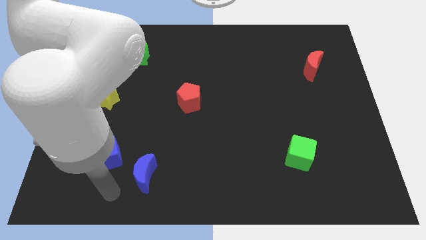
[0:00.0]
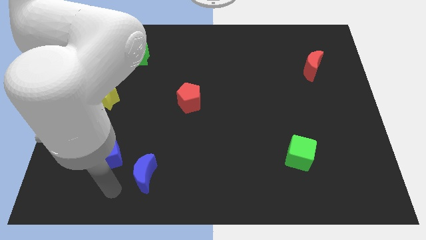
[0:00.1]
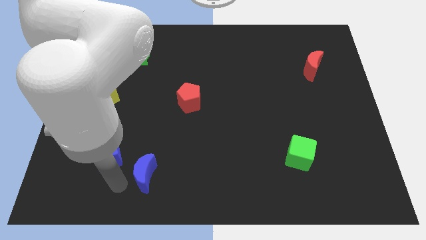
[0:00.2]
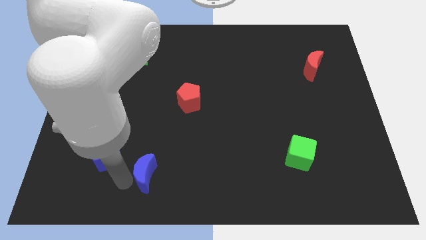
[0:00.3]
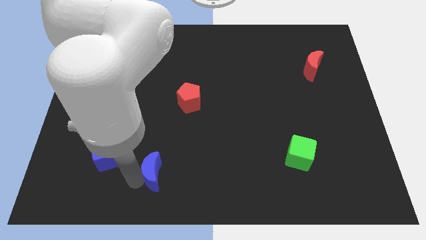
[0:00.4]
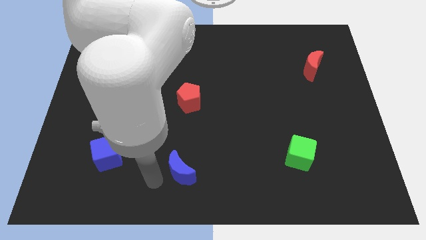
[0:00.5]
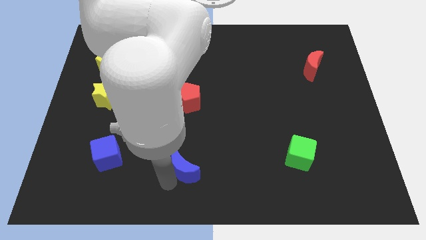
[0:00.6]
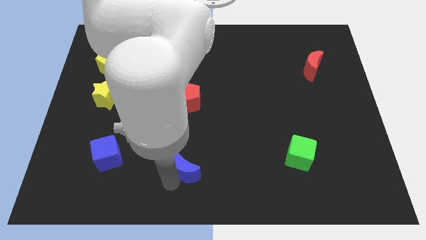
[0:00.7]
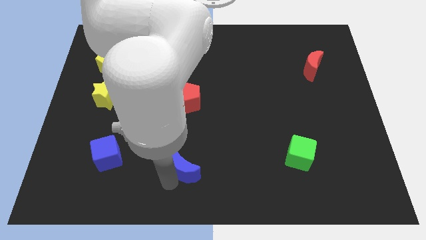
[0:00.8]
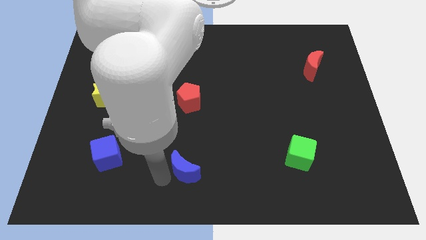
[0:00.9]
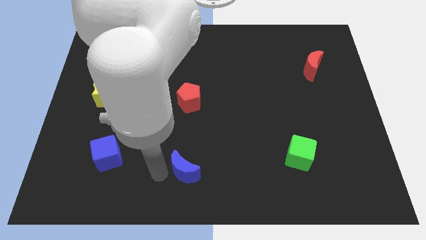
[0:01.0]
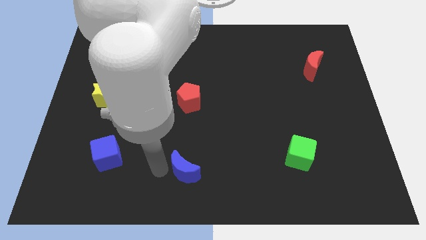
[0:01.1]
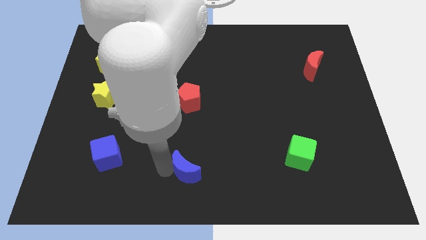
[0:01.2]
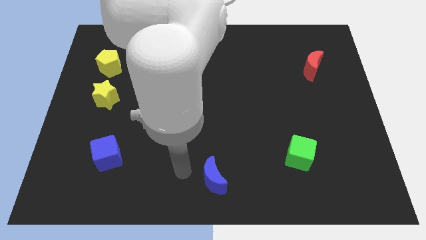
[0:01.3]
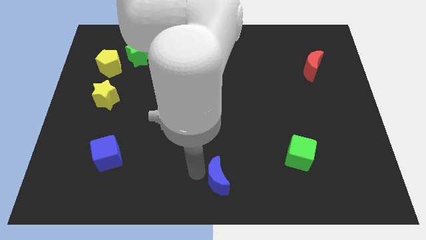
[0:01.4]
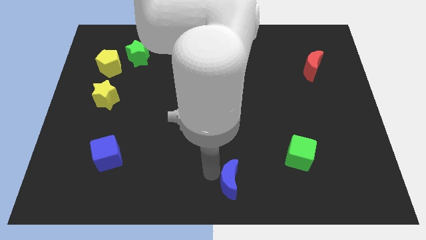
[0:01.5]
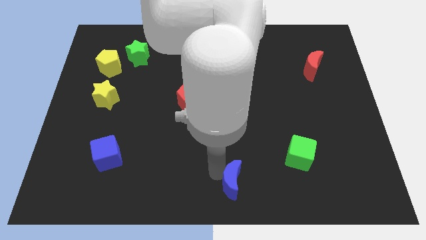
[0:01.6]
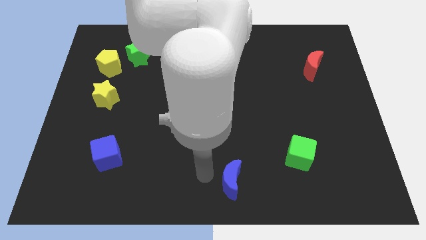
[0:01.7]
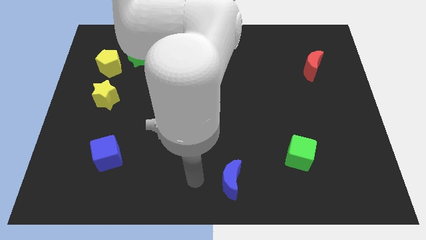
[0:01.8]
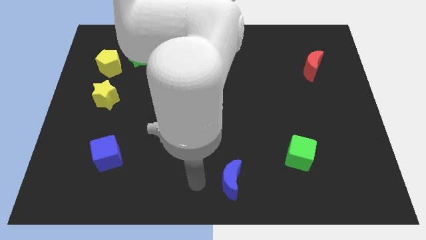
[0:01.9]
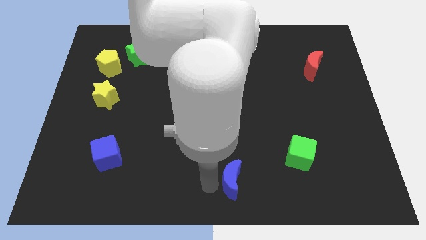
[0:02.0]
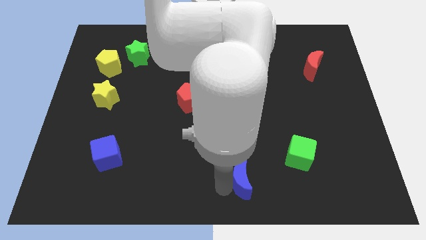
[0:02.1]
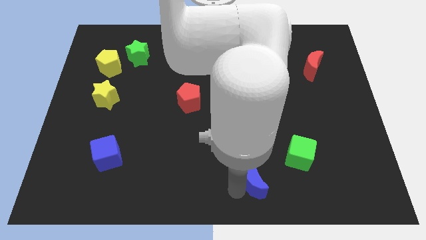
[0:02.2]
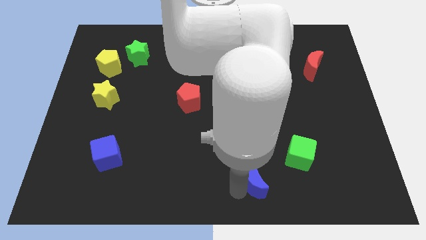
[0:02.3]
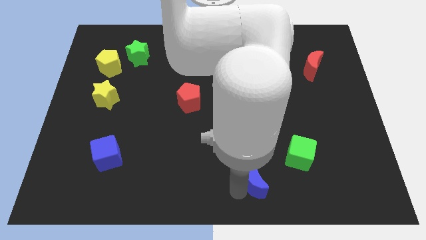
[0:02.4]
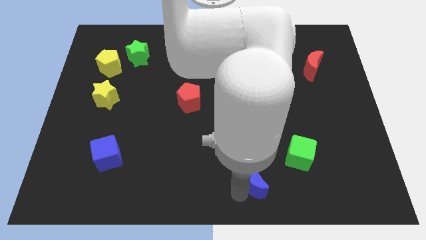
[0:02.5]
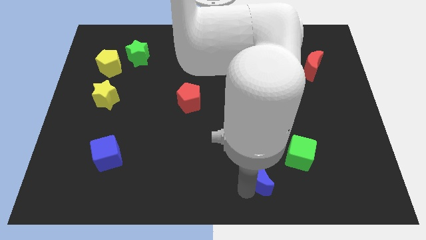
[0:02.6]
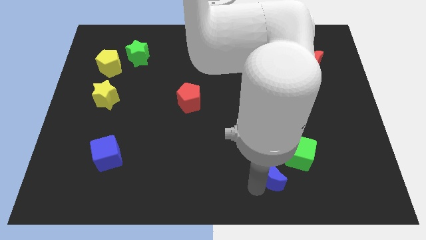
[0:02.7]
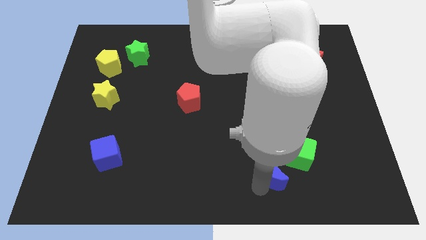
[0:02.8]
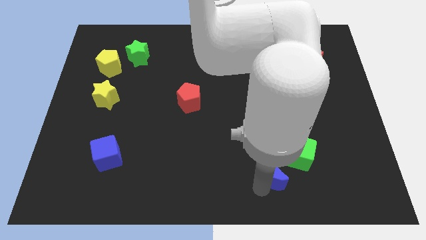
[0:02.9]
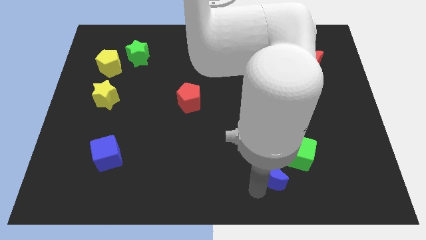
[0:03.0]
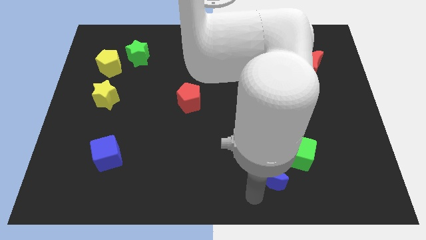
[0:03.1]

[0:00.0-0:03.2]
drag the blue moon diagonally bottom right to the red pentagon

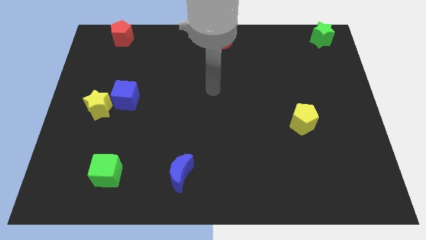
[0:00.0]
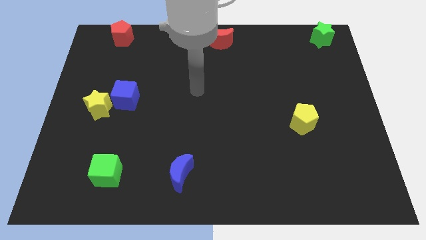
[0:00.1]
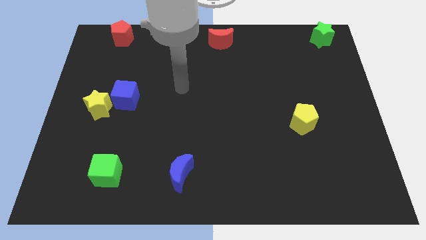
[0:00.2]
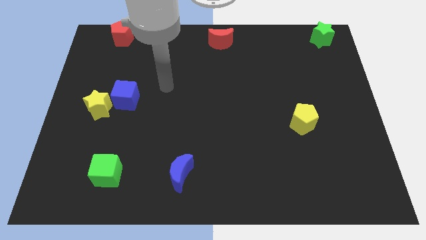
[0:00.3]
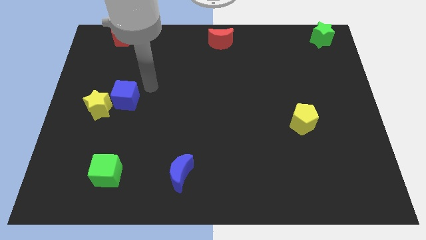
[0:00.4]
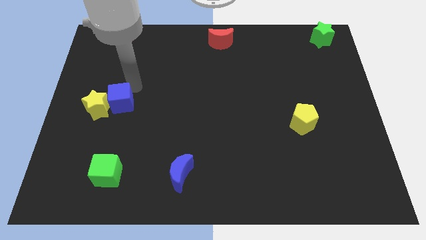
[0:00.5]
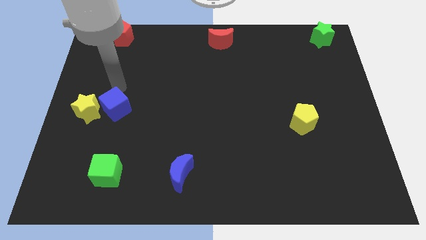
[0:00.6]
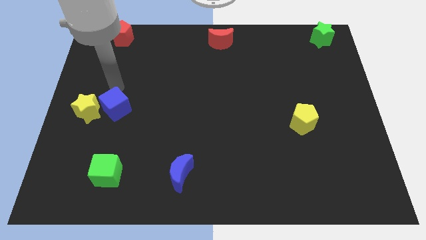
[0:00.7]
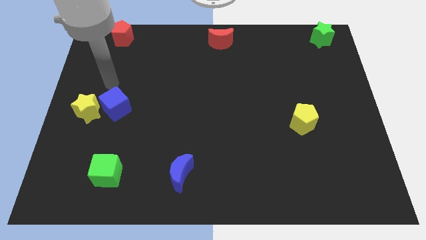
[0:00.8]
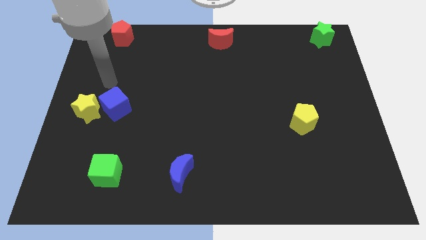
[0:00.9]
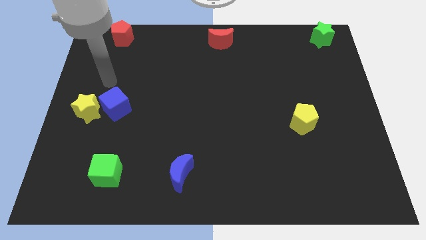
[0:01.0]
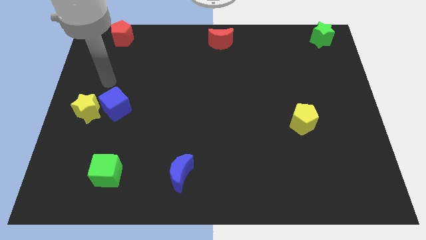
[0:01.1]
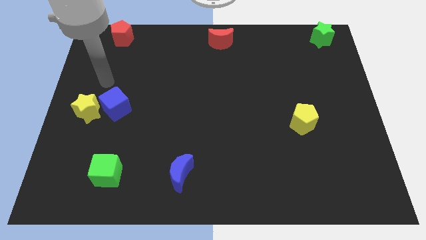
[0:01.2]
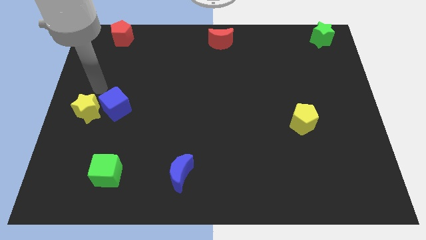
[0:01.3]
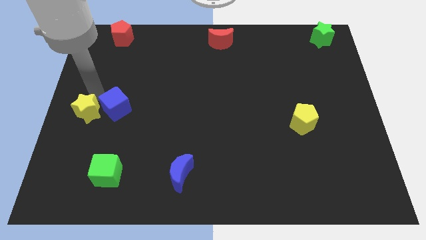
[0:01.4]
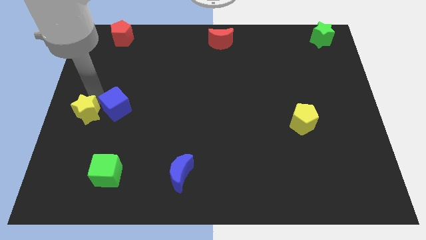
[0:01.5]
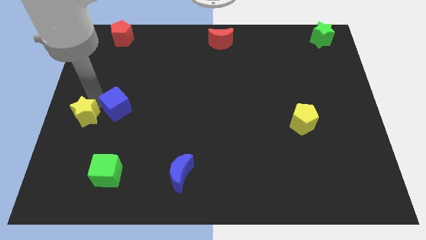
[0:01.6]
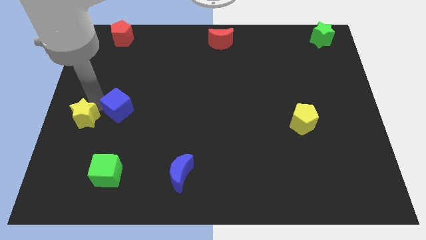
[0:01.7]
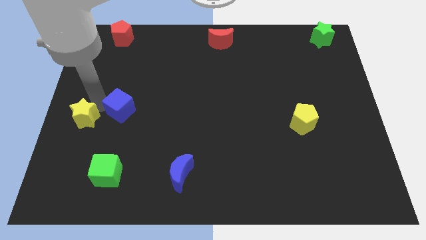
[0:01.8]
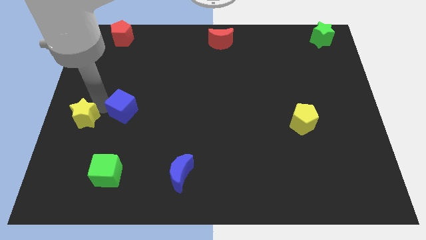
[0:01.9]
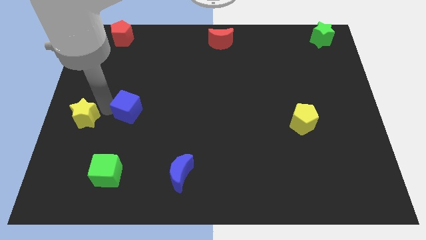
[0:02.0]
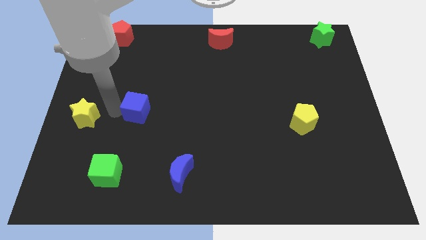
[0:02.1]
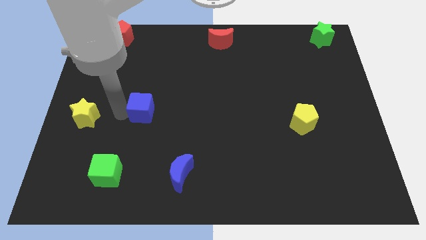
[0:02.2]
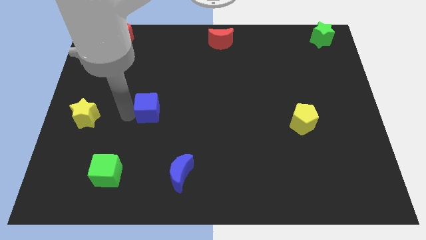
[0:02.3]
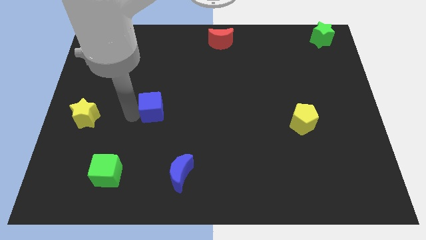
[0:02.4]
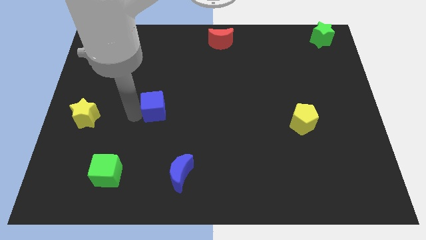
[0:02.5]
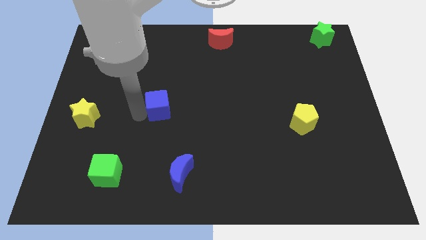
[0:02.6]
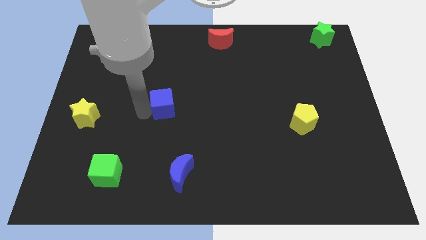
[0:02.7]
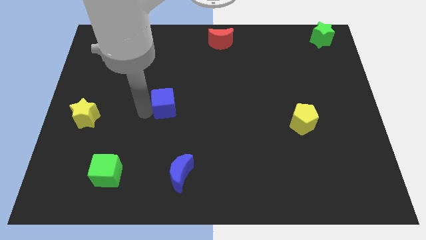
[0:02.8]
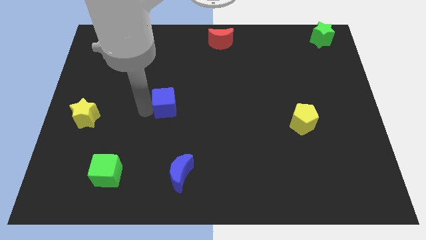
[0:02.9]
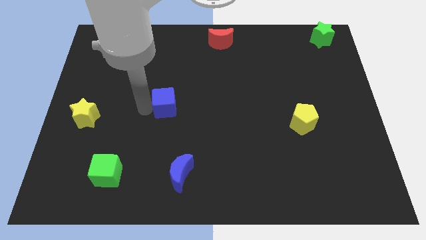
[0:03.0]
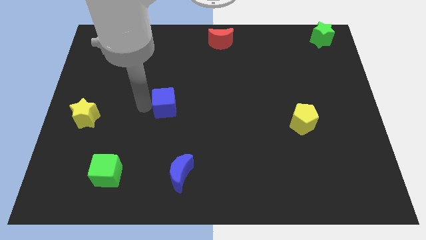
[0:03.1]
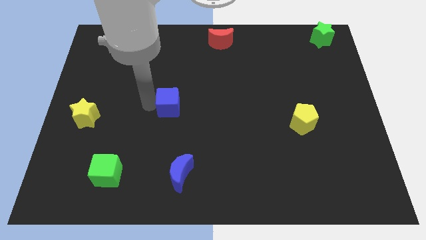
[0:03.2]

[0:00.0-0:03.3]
separate the blue cube from the yellow star

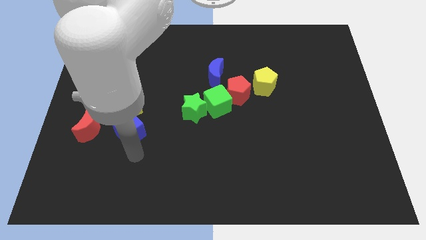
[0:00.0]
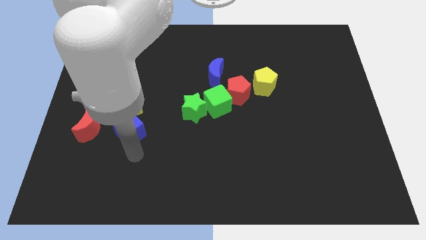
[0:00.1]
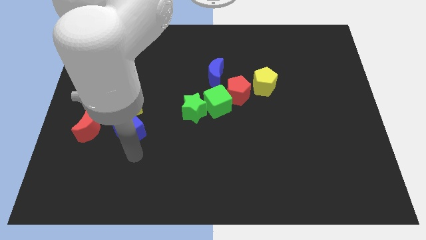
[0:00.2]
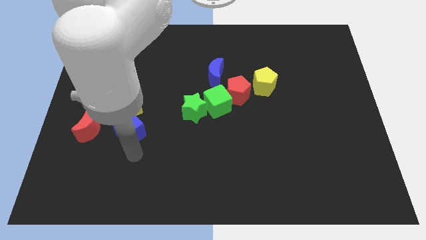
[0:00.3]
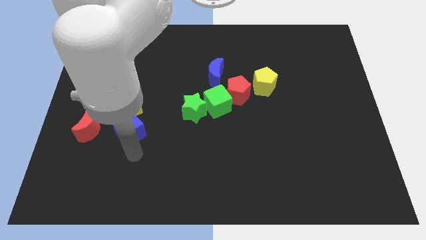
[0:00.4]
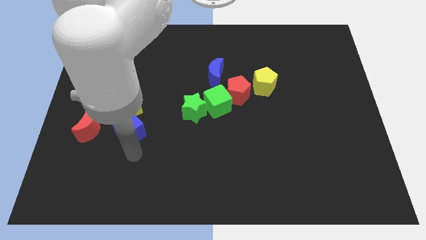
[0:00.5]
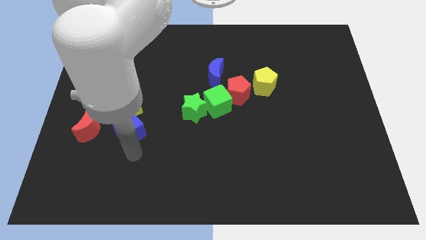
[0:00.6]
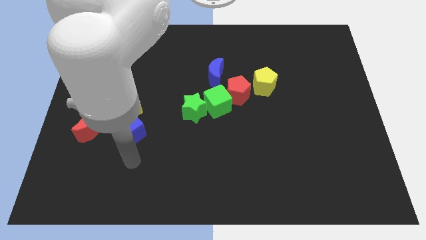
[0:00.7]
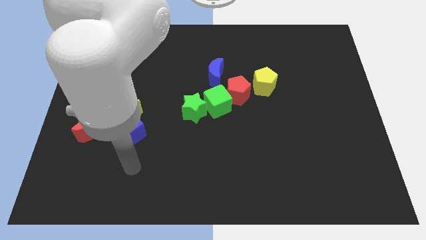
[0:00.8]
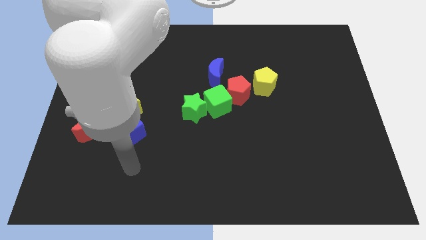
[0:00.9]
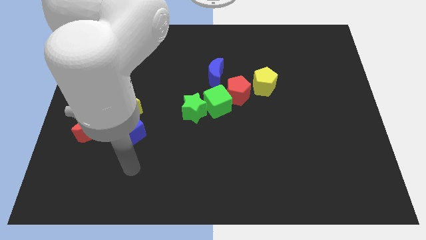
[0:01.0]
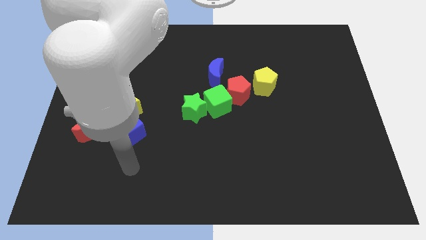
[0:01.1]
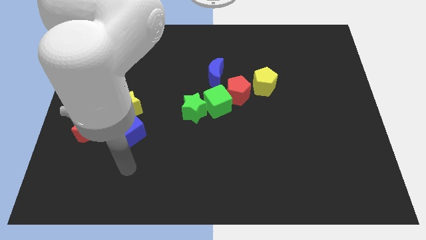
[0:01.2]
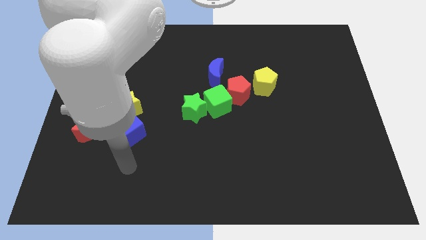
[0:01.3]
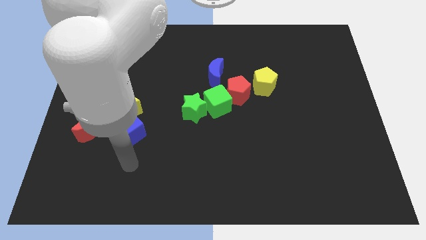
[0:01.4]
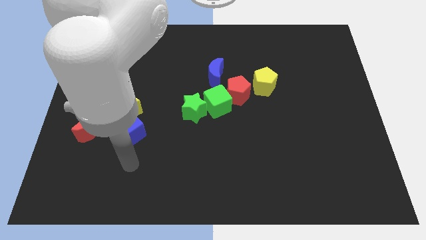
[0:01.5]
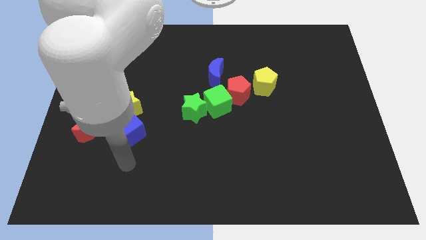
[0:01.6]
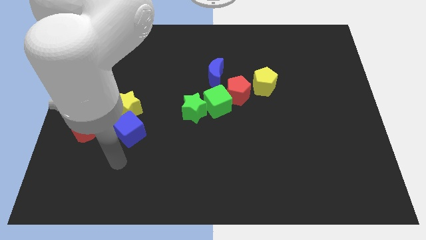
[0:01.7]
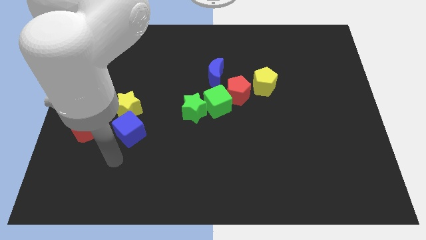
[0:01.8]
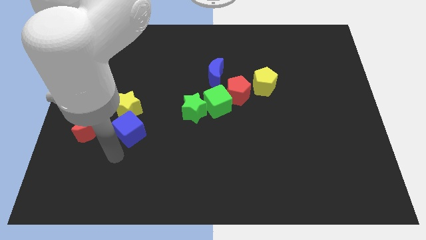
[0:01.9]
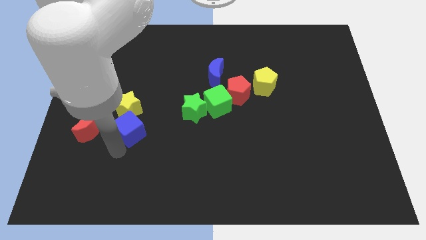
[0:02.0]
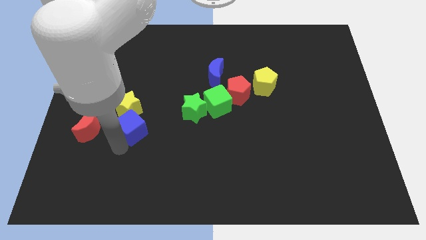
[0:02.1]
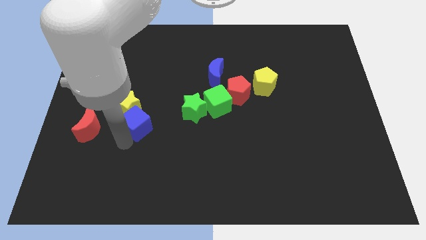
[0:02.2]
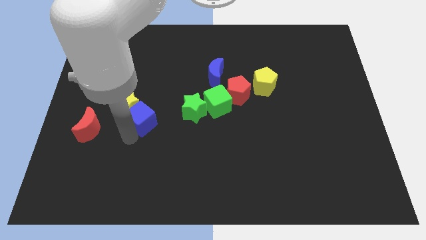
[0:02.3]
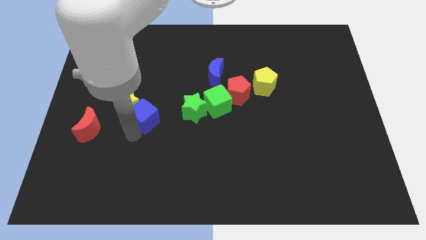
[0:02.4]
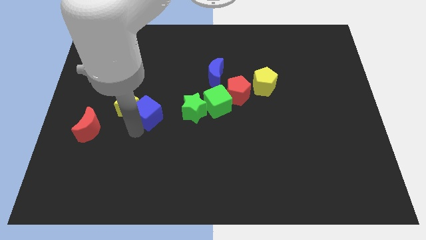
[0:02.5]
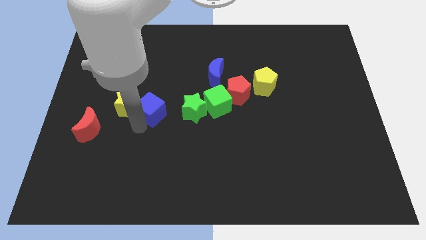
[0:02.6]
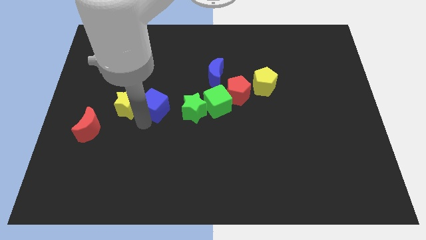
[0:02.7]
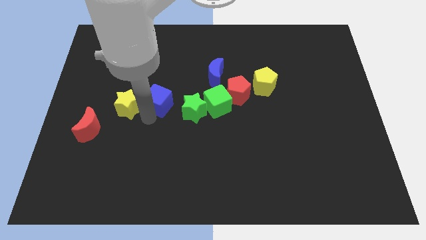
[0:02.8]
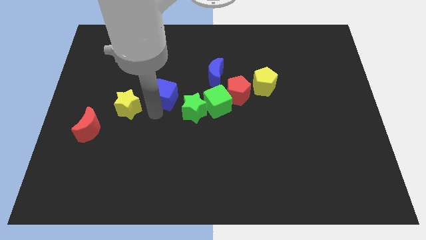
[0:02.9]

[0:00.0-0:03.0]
place the blue cube left to the green star
